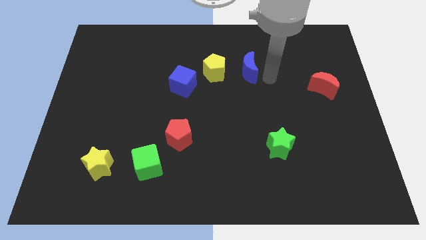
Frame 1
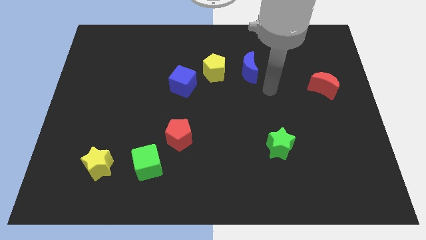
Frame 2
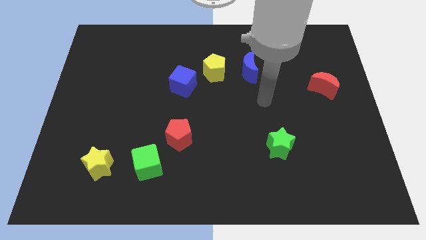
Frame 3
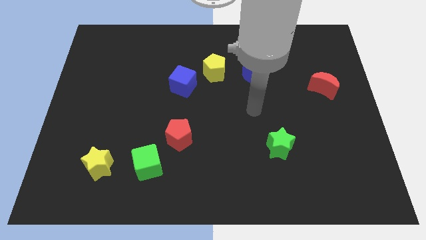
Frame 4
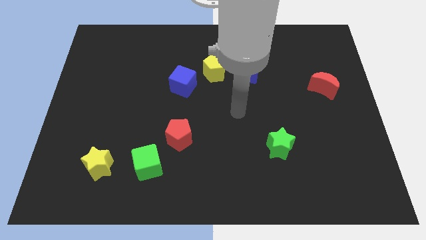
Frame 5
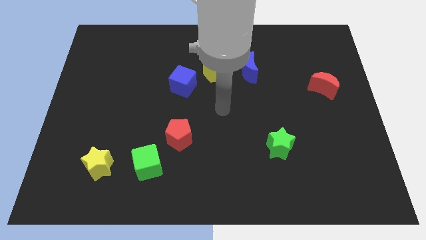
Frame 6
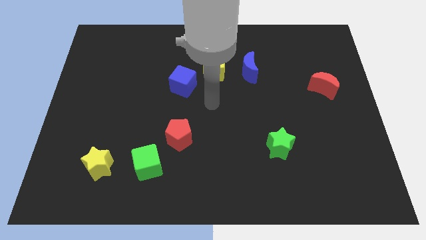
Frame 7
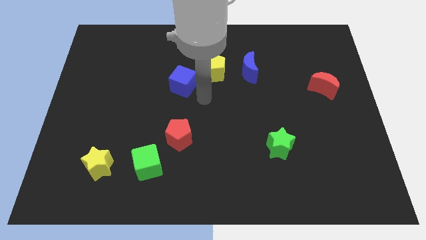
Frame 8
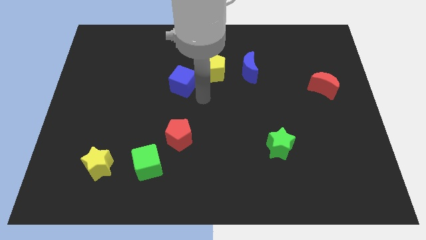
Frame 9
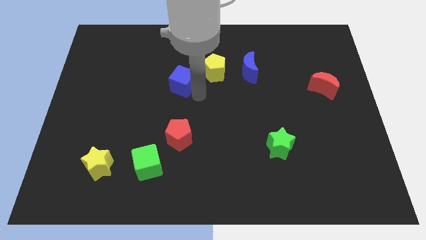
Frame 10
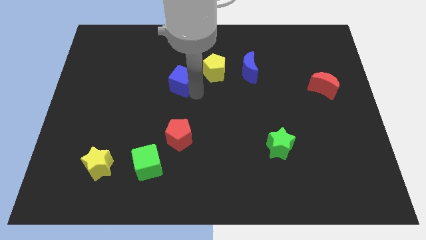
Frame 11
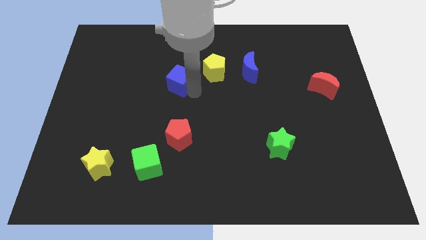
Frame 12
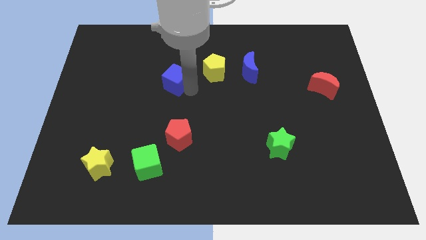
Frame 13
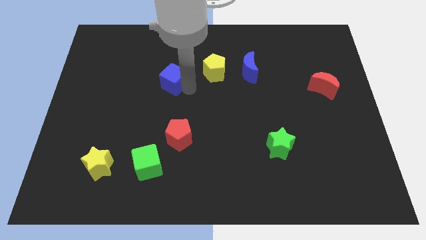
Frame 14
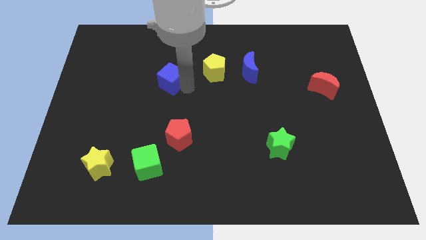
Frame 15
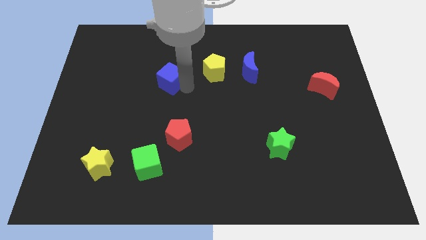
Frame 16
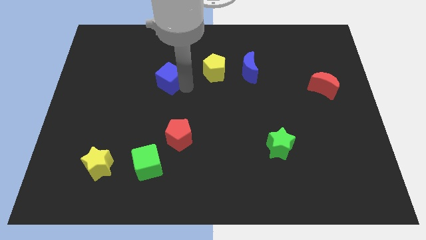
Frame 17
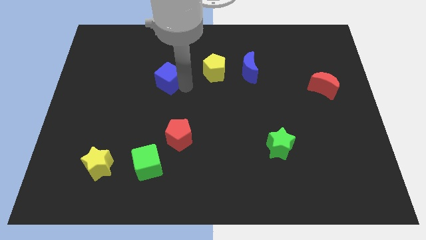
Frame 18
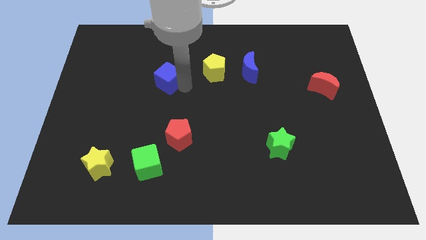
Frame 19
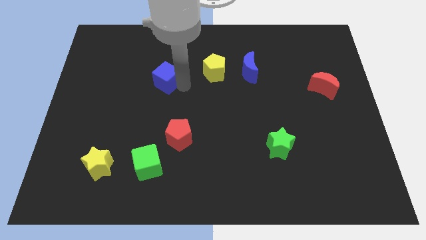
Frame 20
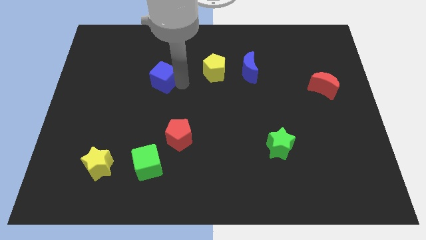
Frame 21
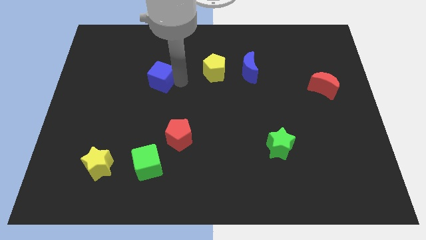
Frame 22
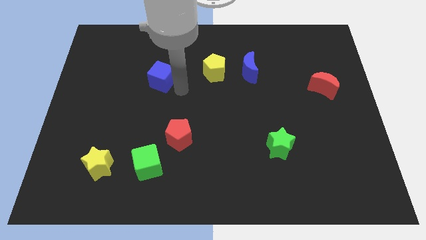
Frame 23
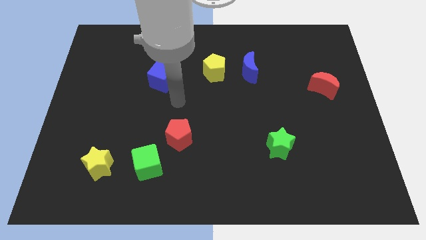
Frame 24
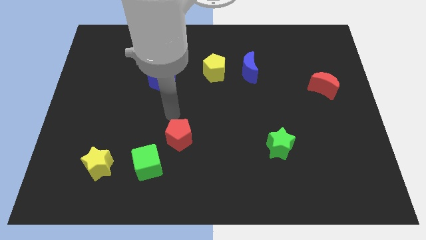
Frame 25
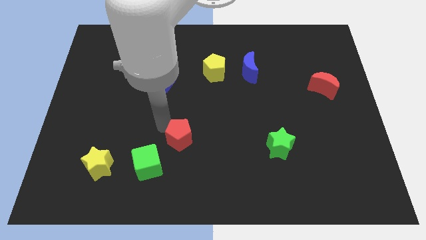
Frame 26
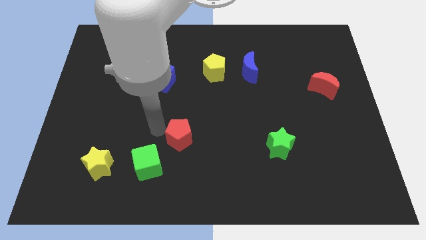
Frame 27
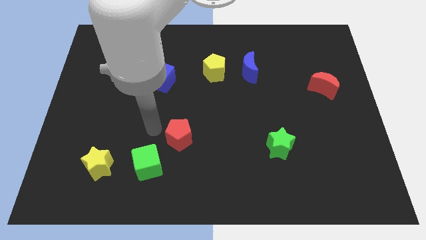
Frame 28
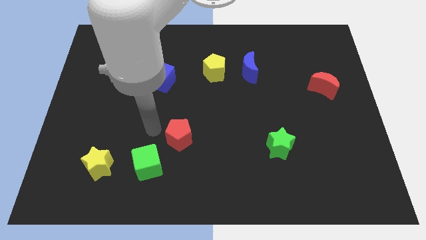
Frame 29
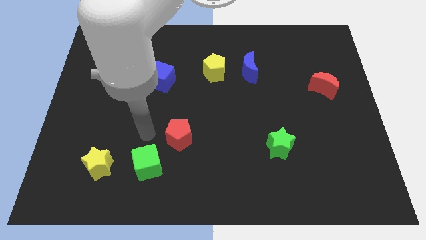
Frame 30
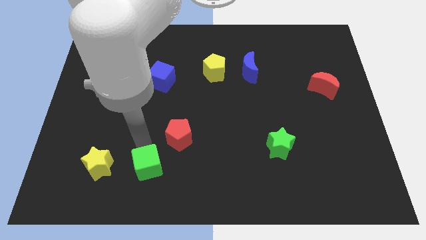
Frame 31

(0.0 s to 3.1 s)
push the blue cube to the left of the board

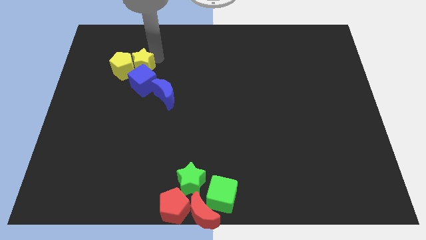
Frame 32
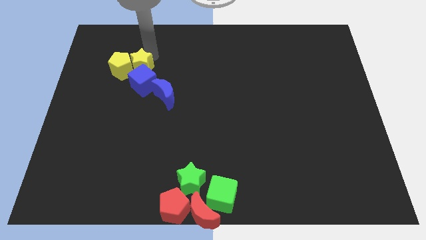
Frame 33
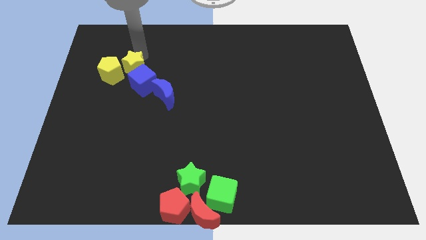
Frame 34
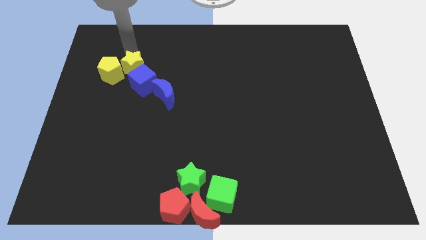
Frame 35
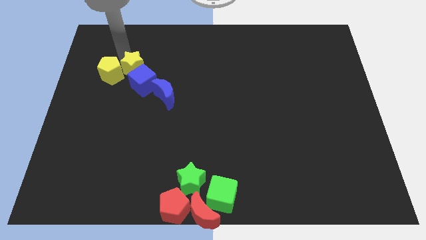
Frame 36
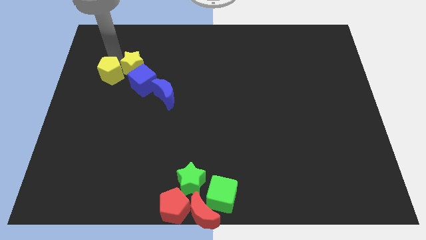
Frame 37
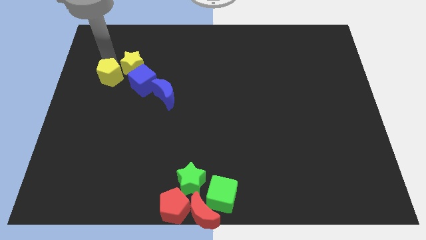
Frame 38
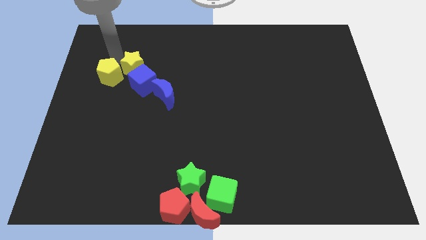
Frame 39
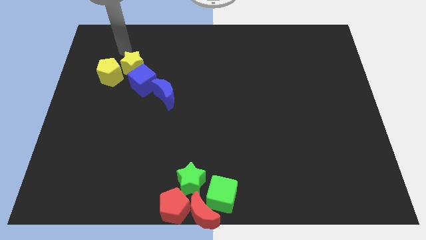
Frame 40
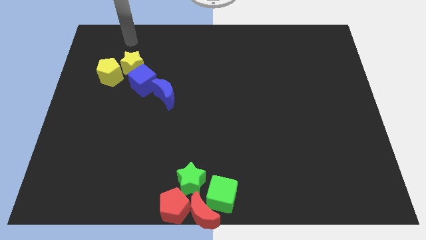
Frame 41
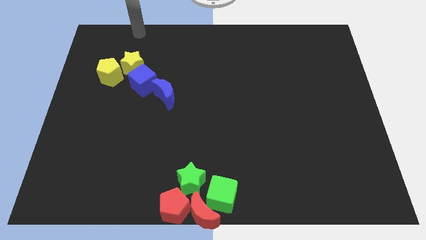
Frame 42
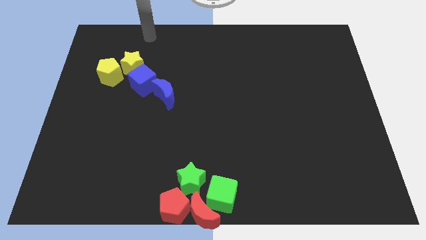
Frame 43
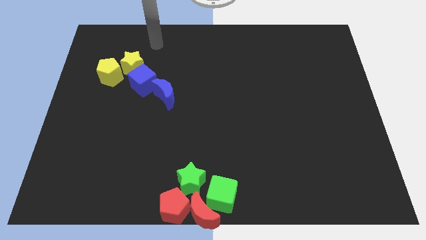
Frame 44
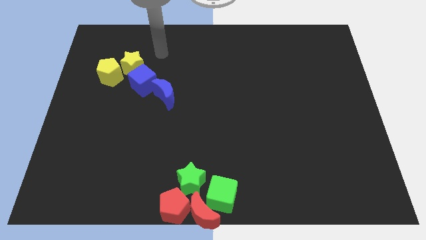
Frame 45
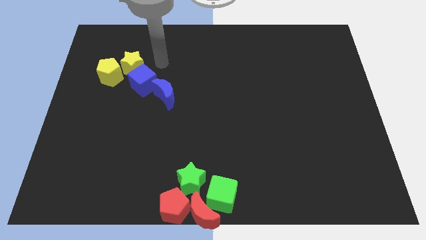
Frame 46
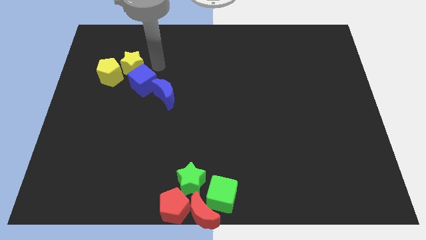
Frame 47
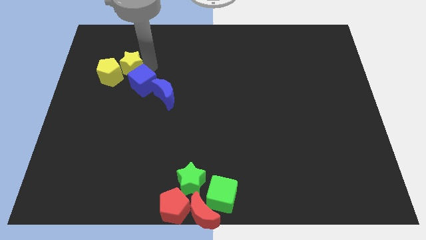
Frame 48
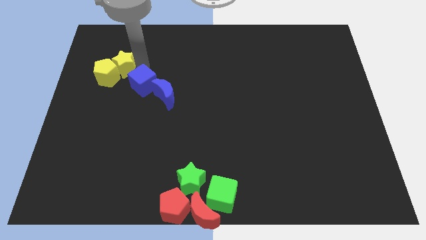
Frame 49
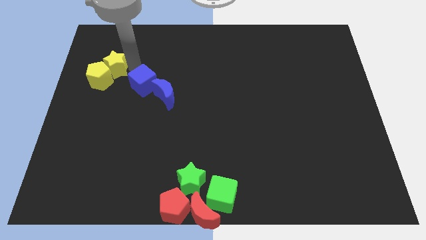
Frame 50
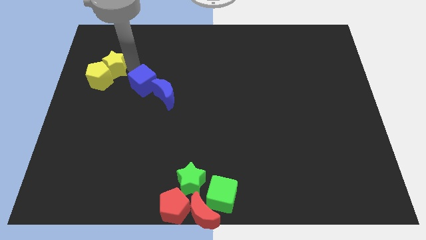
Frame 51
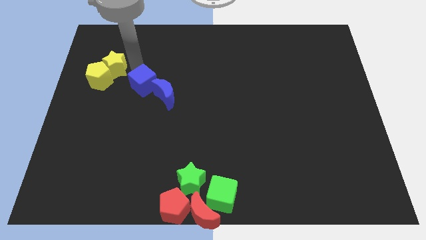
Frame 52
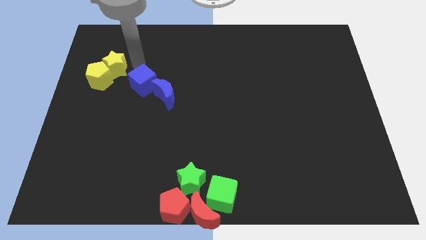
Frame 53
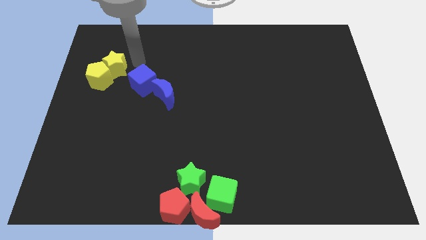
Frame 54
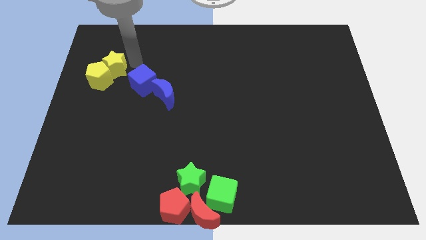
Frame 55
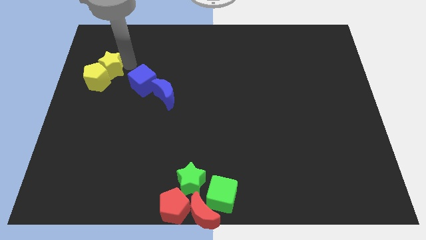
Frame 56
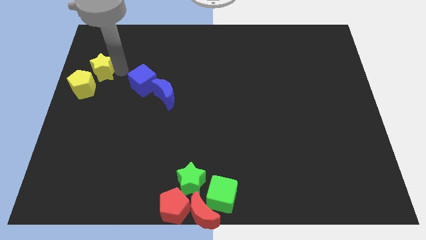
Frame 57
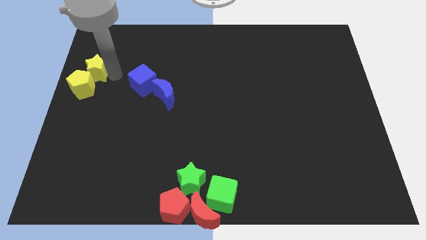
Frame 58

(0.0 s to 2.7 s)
move the yellow star and yellow pentagon towards the left side

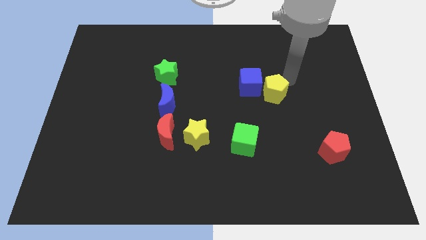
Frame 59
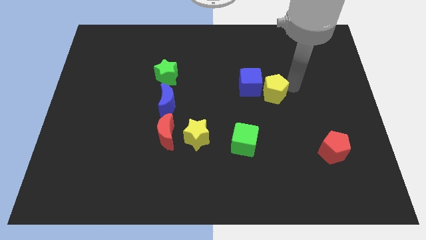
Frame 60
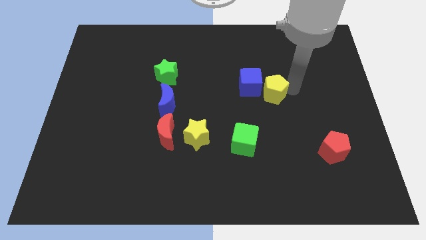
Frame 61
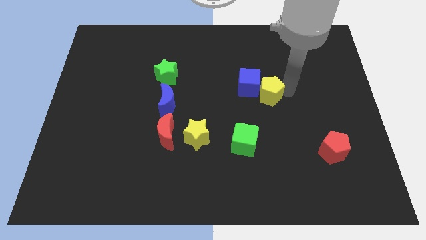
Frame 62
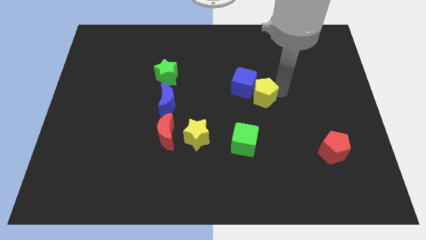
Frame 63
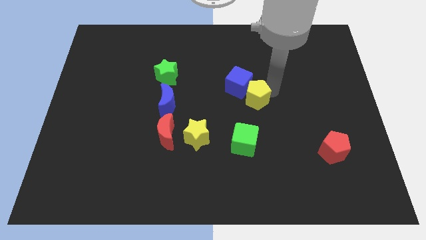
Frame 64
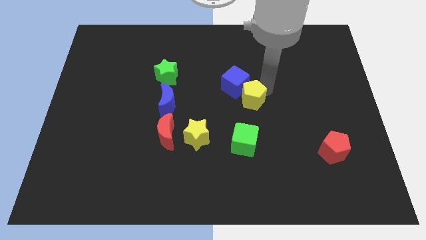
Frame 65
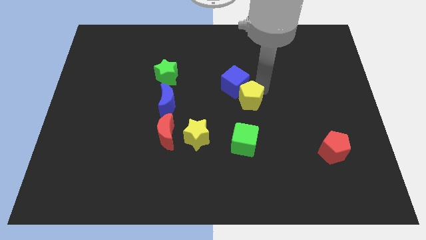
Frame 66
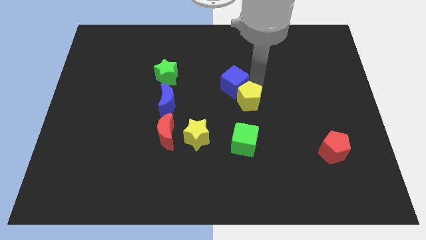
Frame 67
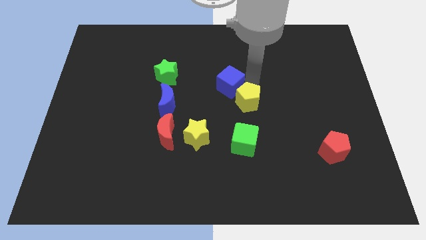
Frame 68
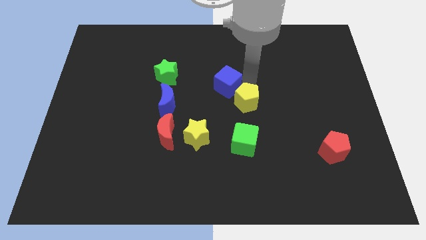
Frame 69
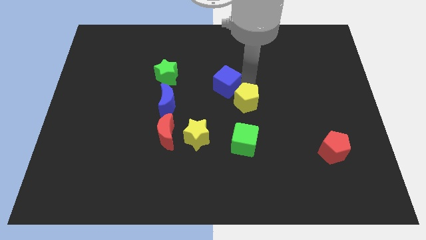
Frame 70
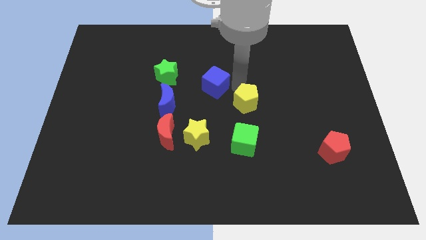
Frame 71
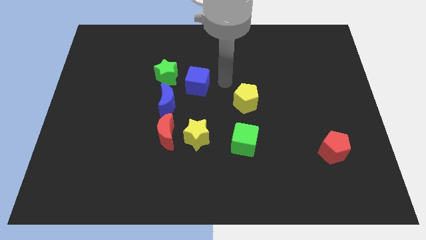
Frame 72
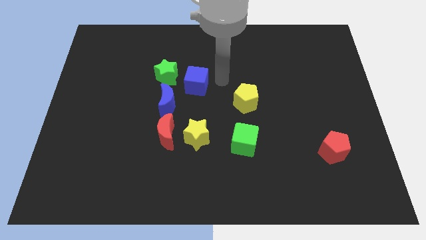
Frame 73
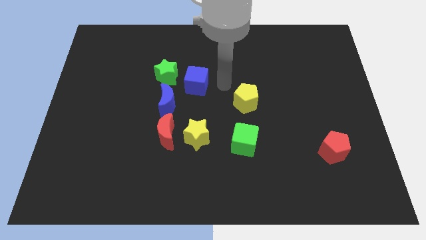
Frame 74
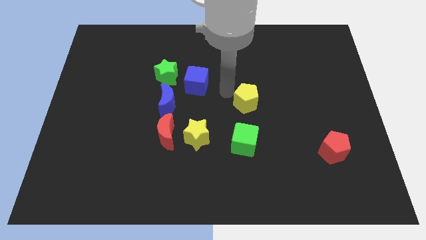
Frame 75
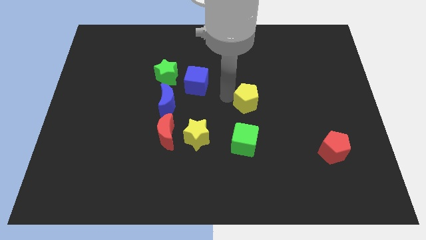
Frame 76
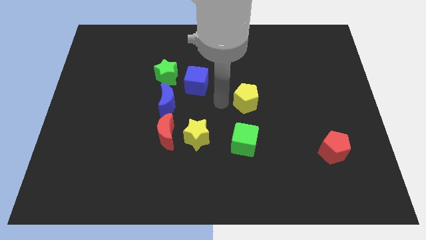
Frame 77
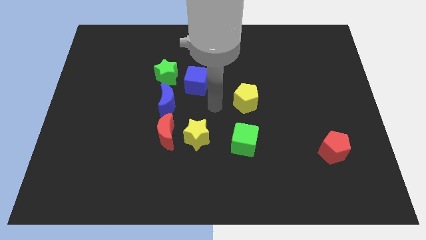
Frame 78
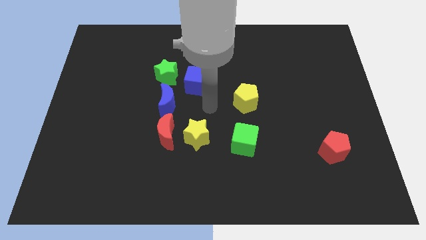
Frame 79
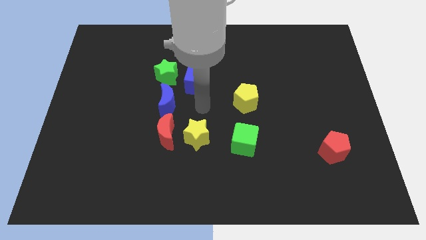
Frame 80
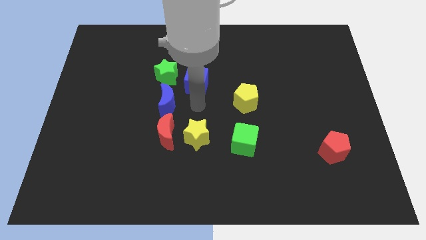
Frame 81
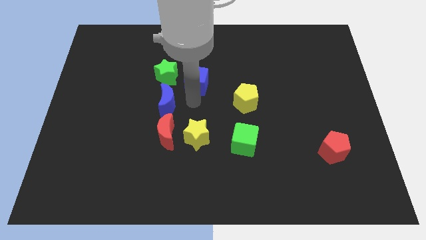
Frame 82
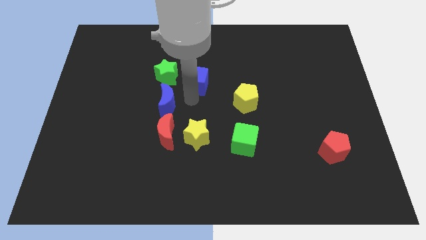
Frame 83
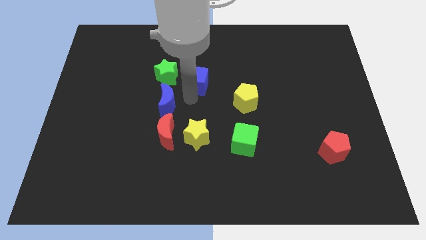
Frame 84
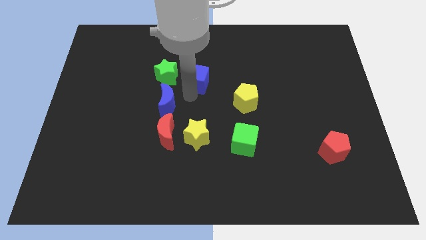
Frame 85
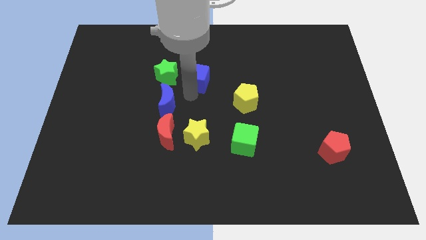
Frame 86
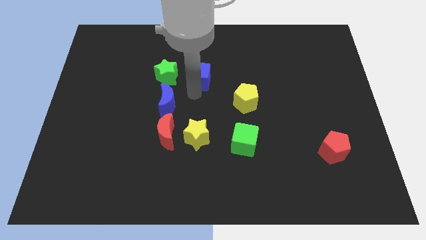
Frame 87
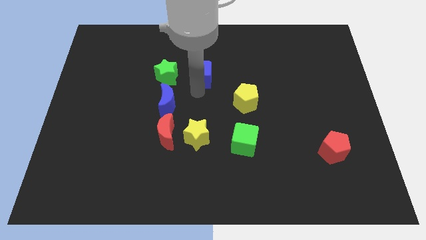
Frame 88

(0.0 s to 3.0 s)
place the blue cube vertically to yellow star

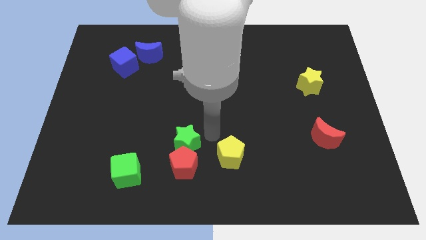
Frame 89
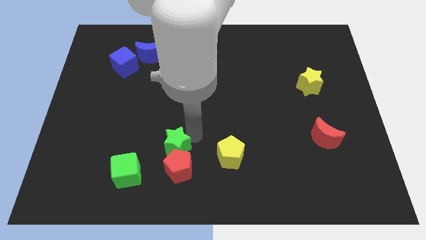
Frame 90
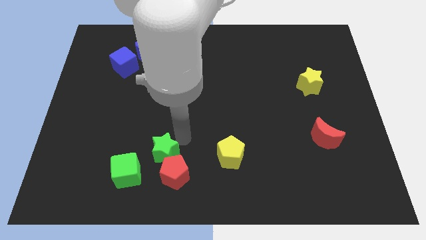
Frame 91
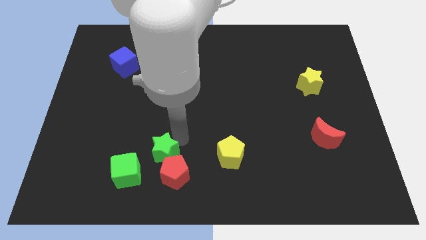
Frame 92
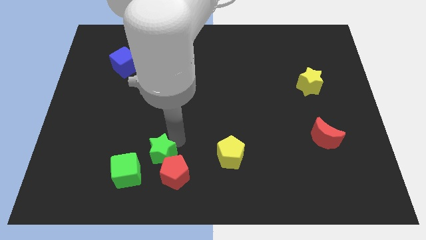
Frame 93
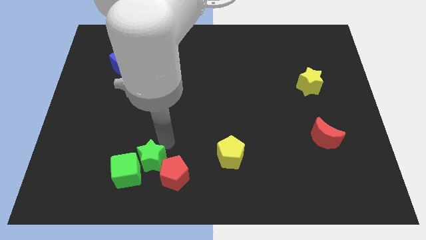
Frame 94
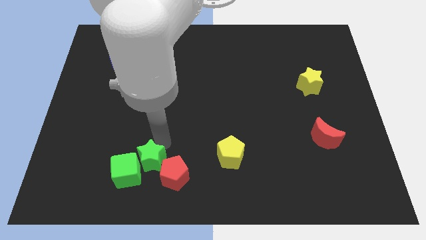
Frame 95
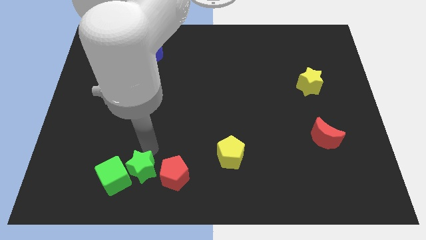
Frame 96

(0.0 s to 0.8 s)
push green star in to green cube
